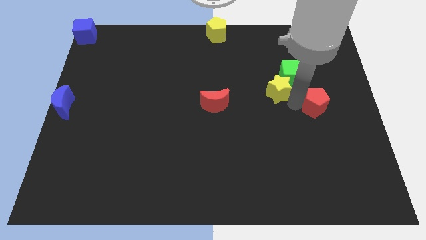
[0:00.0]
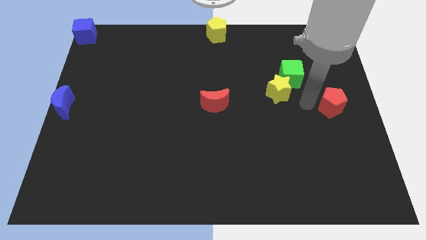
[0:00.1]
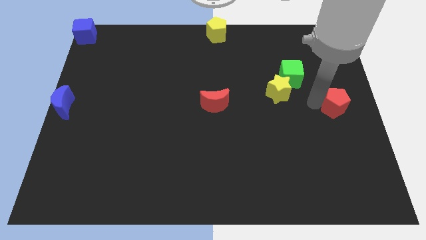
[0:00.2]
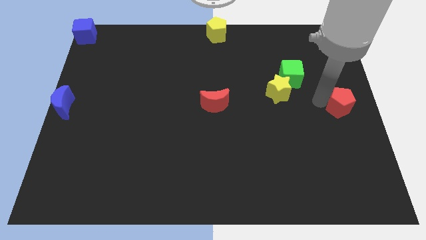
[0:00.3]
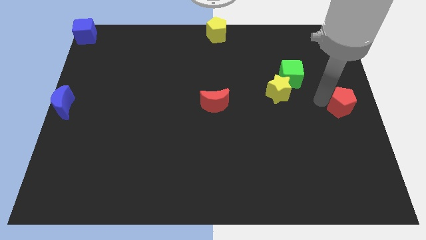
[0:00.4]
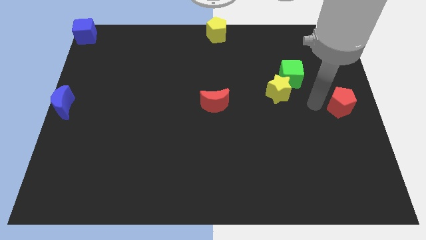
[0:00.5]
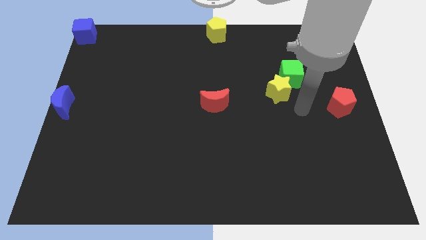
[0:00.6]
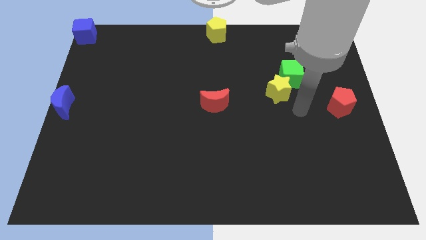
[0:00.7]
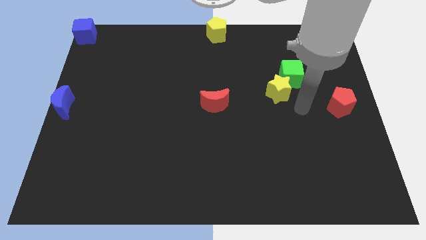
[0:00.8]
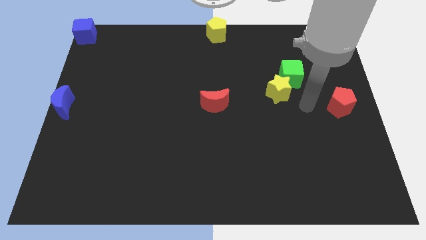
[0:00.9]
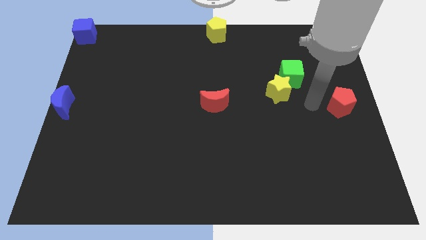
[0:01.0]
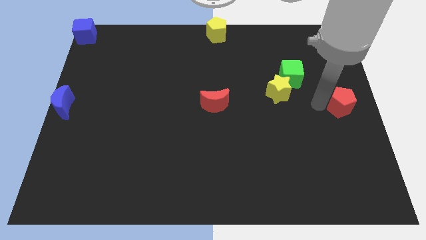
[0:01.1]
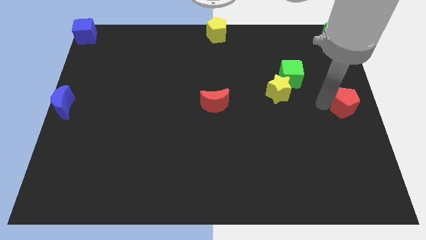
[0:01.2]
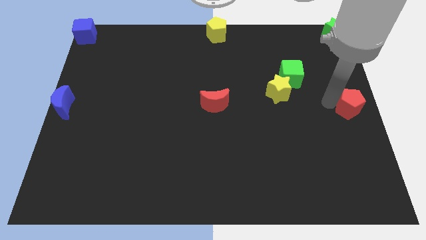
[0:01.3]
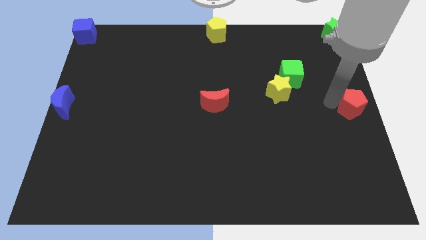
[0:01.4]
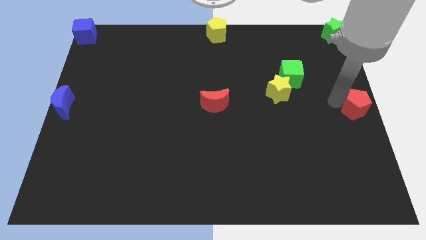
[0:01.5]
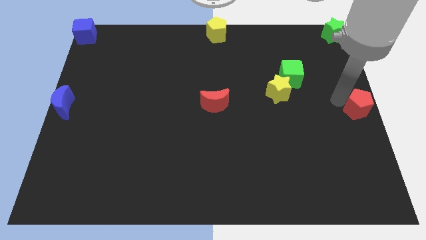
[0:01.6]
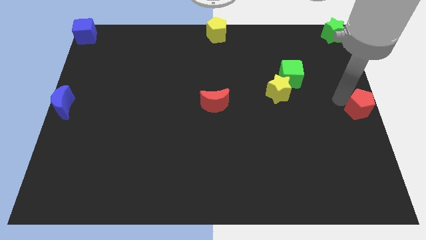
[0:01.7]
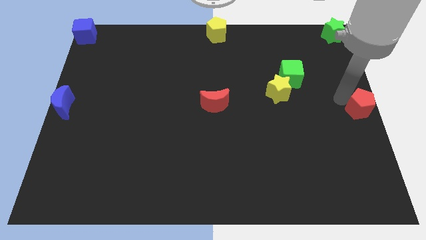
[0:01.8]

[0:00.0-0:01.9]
move the red pentagon right center of the board

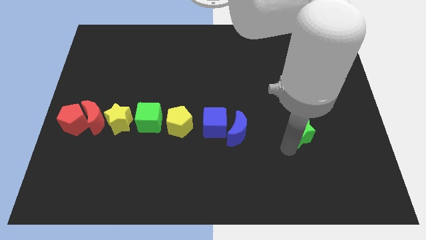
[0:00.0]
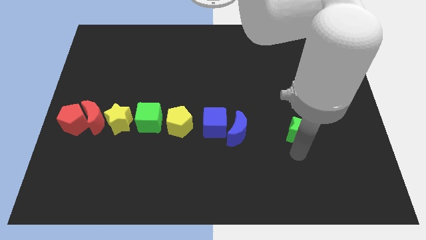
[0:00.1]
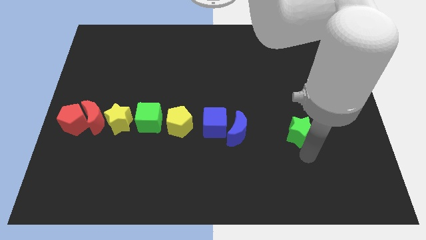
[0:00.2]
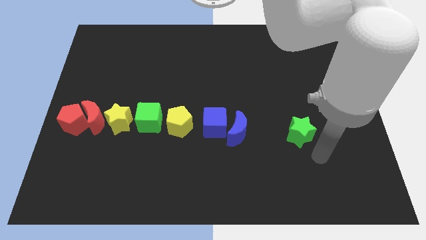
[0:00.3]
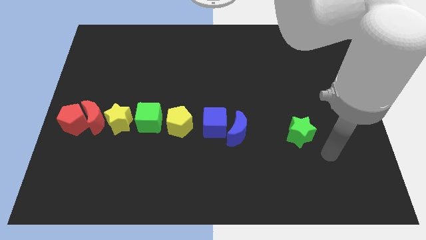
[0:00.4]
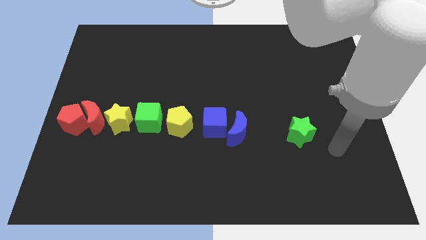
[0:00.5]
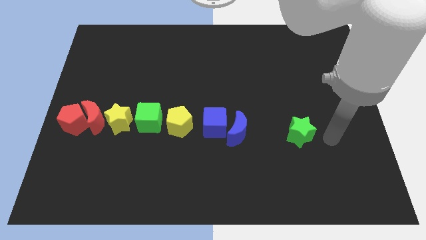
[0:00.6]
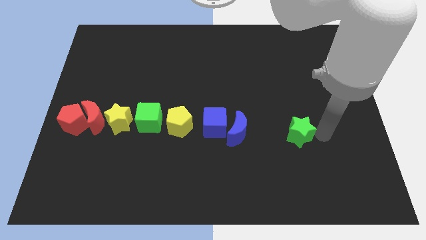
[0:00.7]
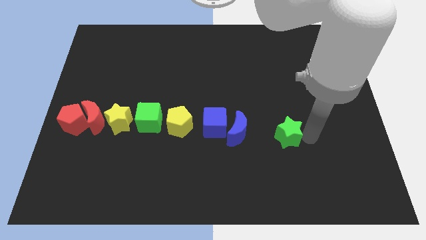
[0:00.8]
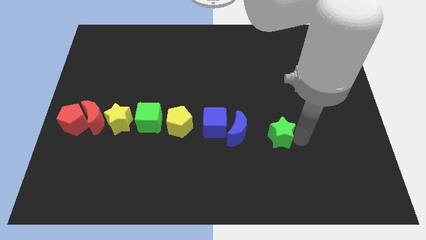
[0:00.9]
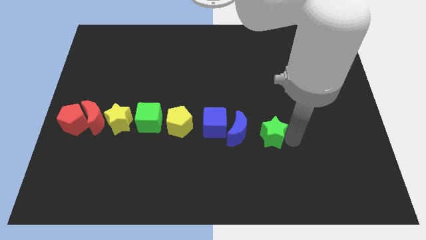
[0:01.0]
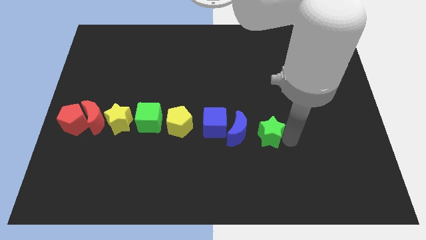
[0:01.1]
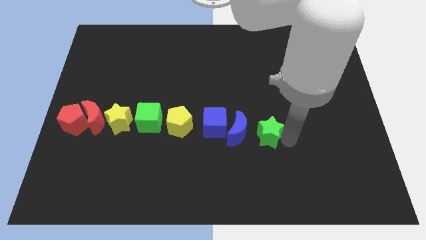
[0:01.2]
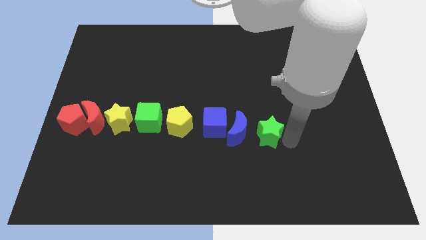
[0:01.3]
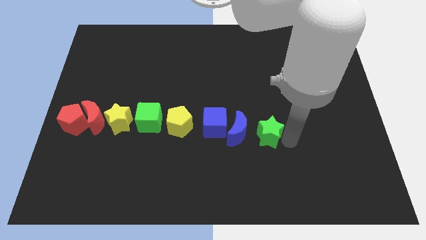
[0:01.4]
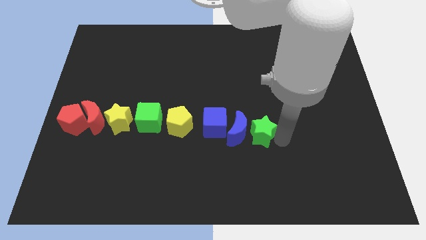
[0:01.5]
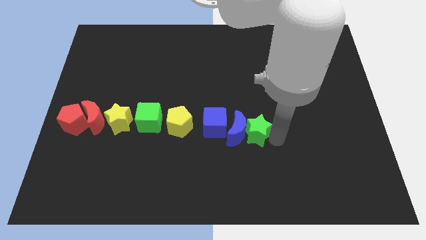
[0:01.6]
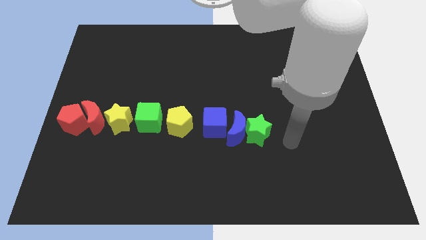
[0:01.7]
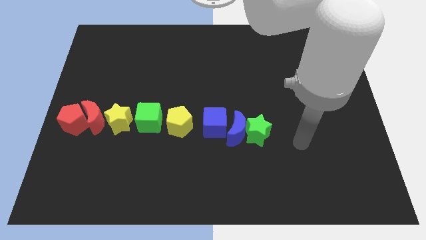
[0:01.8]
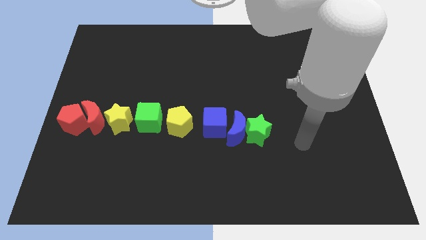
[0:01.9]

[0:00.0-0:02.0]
place the green star into the blue crescent

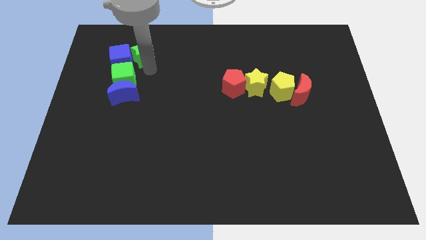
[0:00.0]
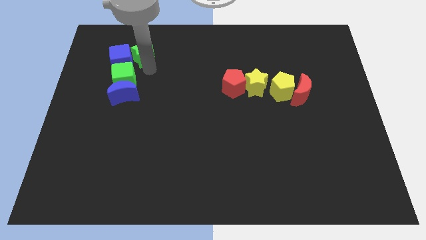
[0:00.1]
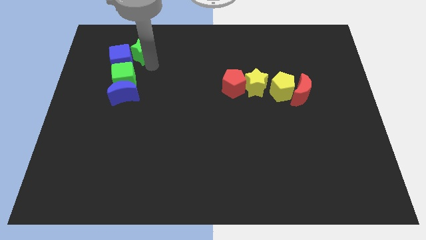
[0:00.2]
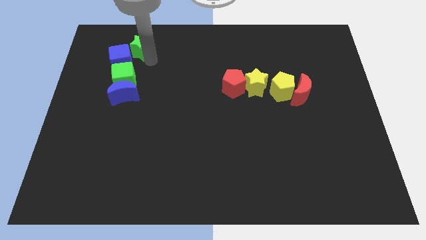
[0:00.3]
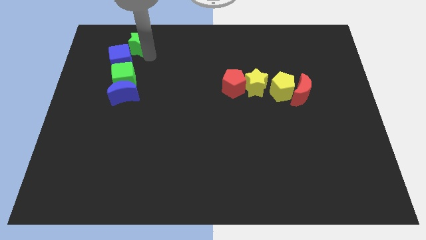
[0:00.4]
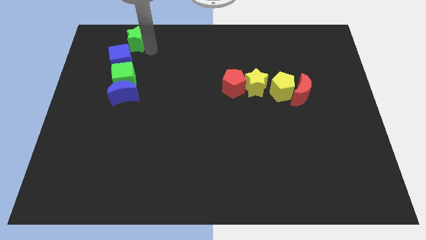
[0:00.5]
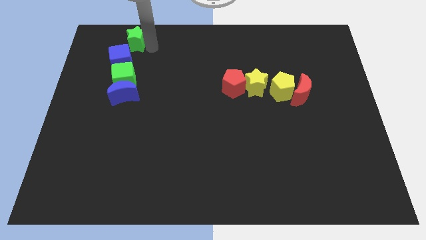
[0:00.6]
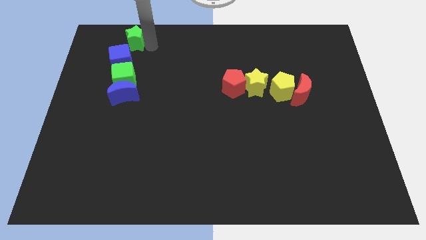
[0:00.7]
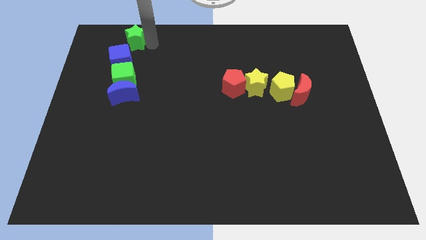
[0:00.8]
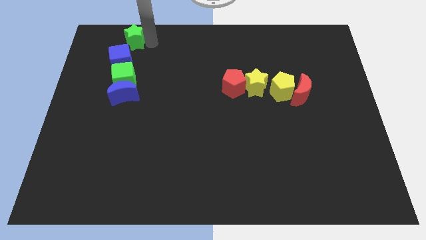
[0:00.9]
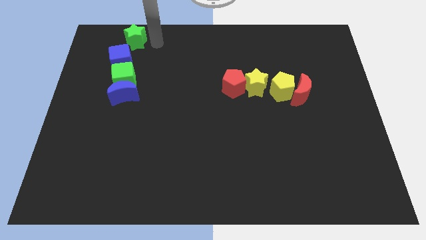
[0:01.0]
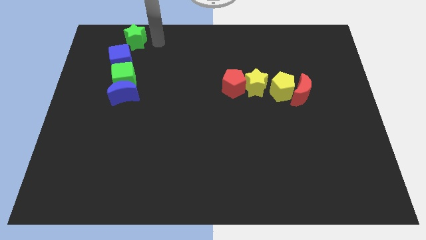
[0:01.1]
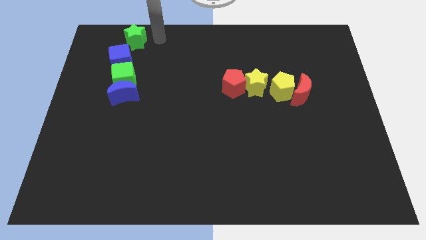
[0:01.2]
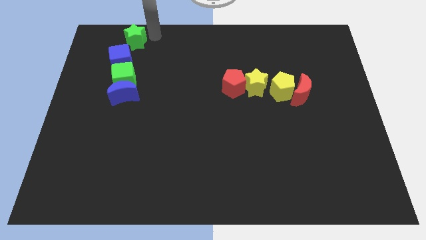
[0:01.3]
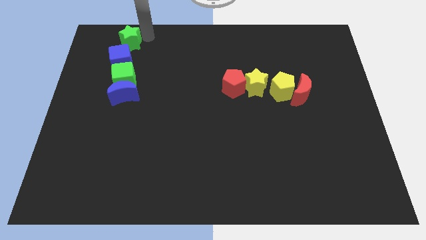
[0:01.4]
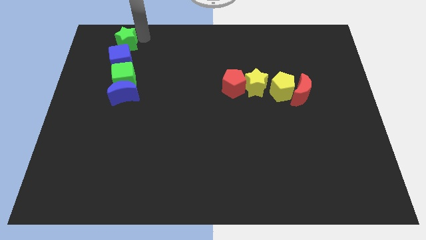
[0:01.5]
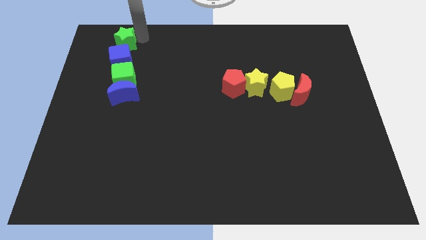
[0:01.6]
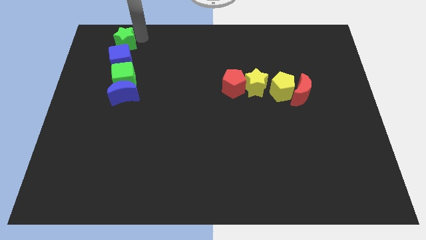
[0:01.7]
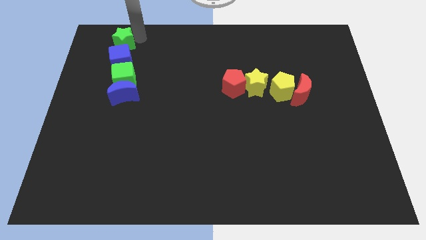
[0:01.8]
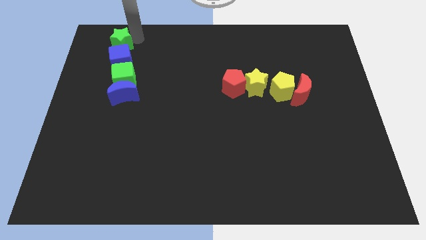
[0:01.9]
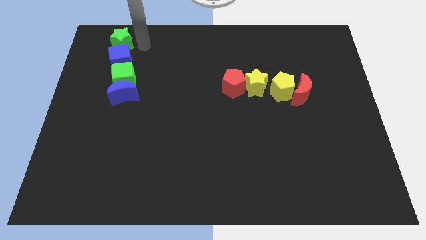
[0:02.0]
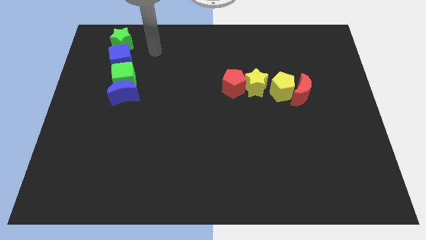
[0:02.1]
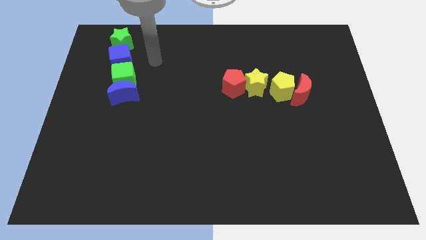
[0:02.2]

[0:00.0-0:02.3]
put the green star above the blue cube

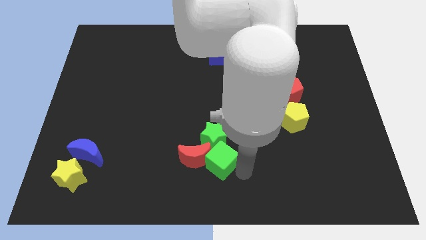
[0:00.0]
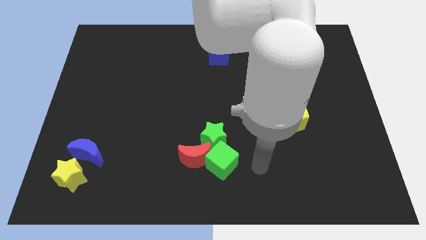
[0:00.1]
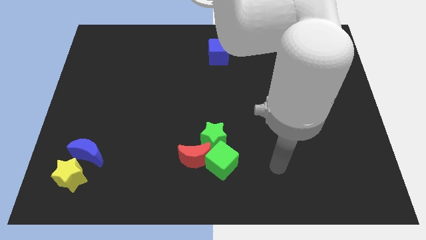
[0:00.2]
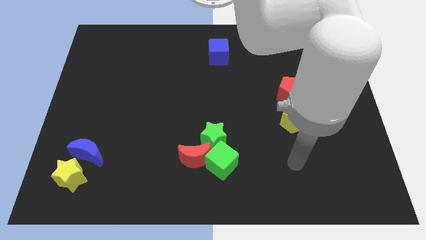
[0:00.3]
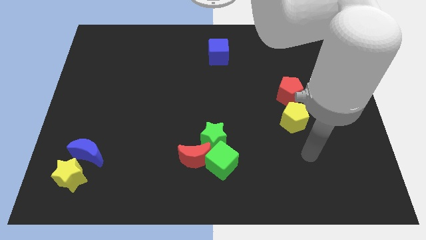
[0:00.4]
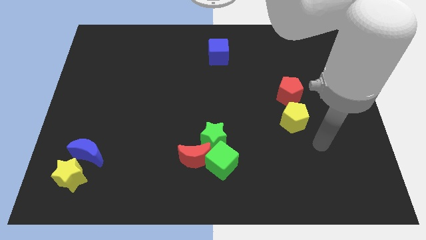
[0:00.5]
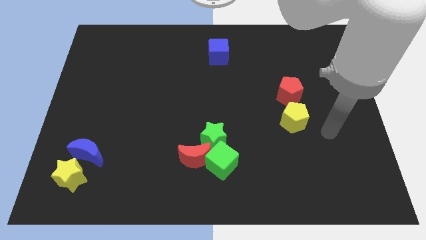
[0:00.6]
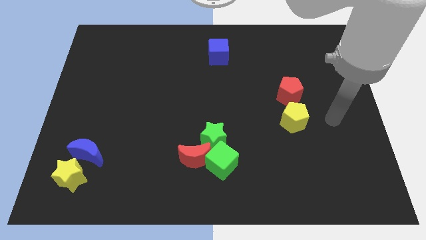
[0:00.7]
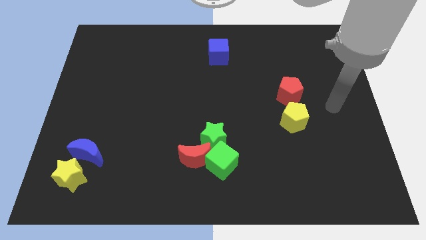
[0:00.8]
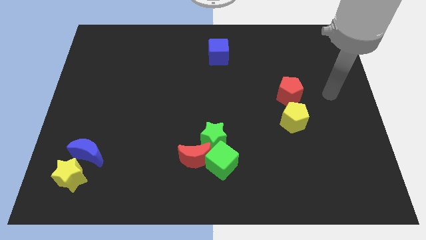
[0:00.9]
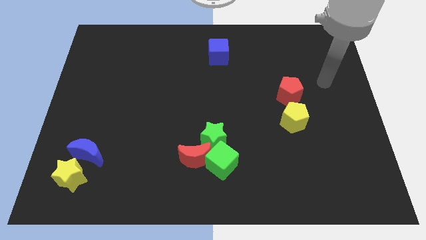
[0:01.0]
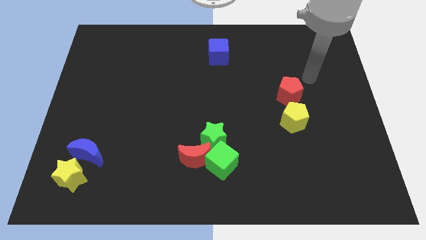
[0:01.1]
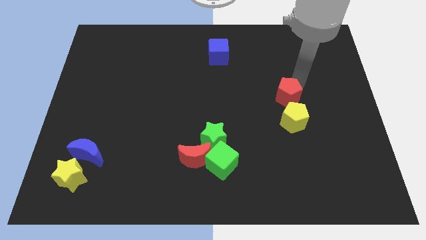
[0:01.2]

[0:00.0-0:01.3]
move your arm to the top right of the red pentagon

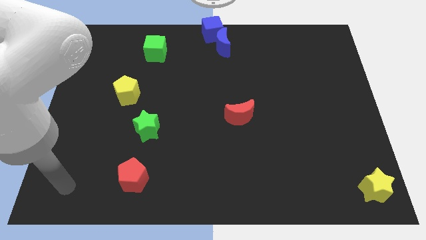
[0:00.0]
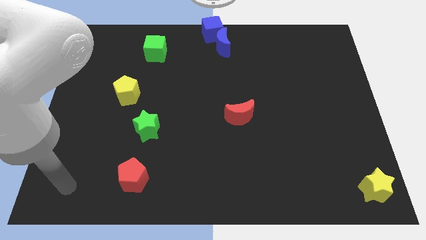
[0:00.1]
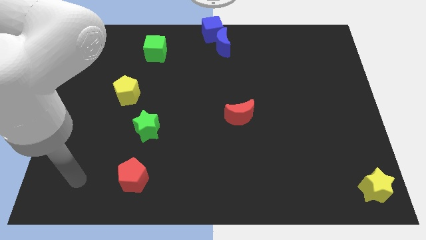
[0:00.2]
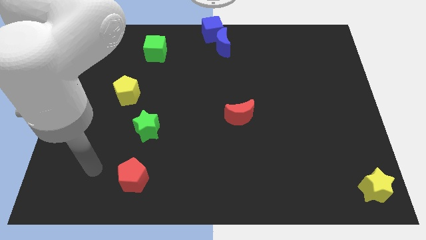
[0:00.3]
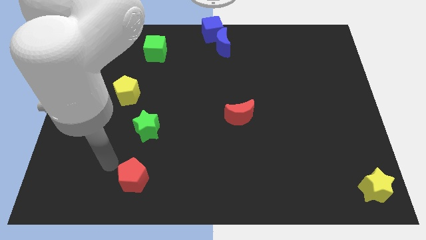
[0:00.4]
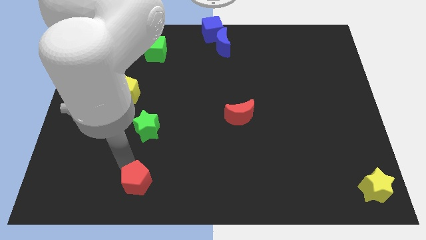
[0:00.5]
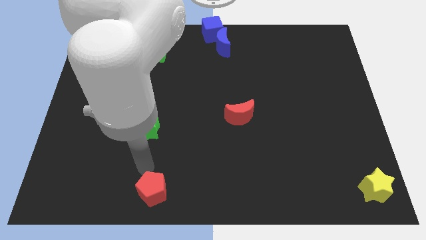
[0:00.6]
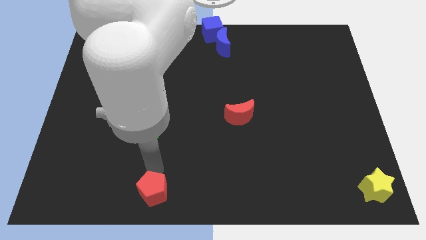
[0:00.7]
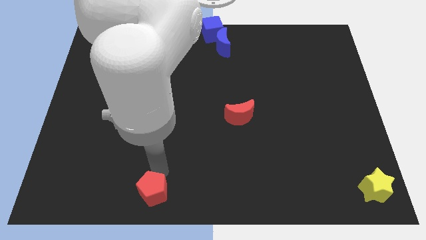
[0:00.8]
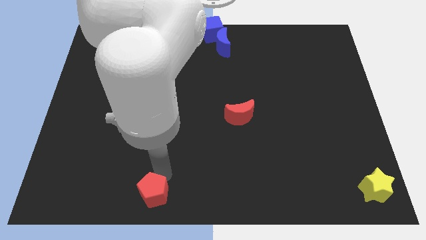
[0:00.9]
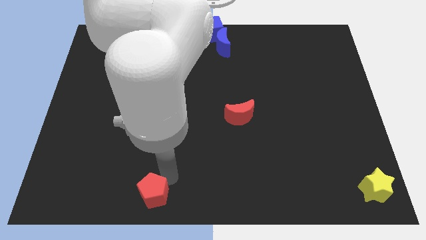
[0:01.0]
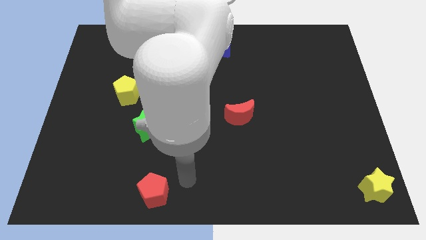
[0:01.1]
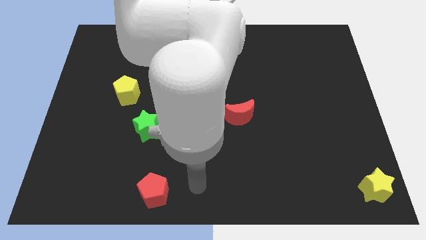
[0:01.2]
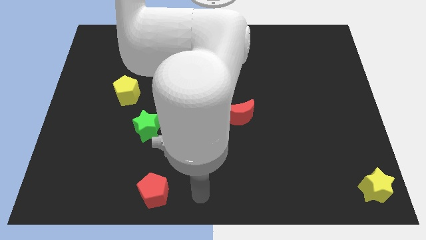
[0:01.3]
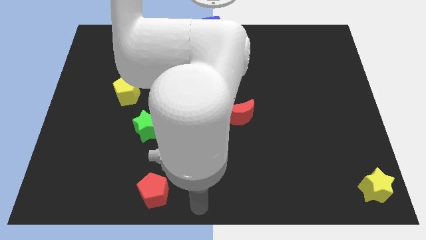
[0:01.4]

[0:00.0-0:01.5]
push the red pentagon downward
